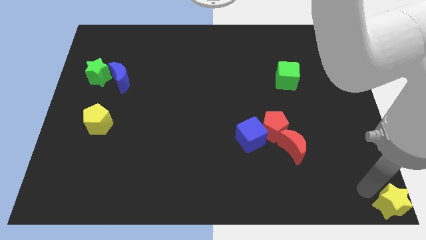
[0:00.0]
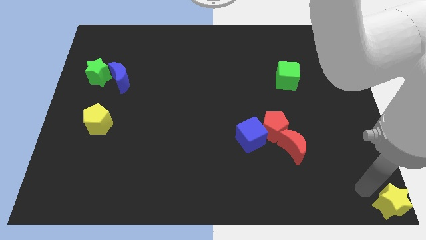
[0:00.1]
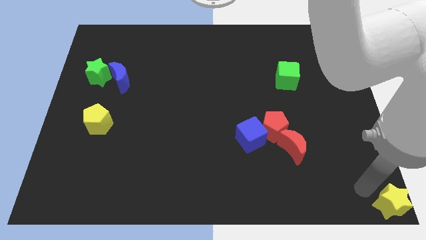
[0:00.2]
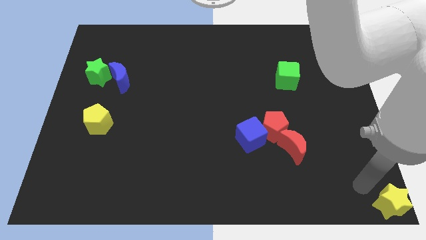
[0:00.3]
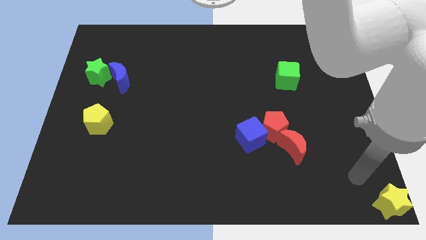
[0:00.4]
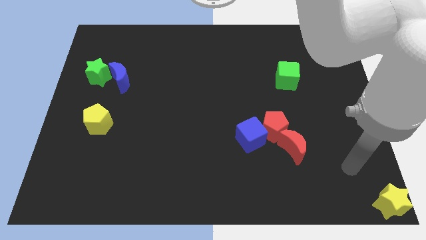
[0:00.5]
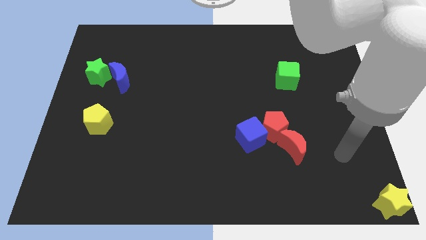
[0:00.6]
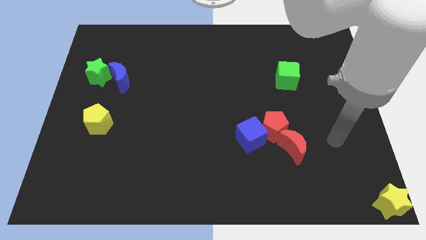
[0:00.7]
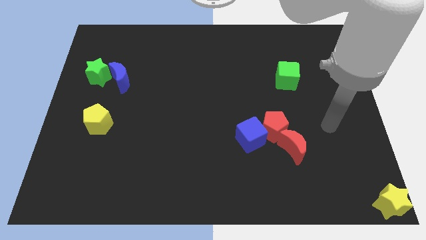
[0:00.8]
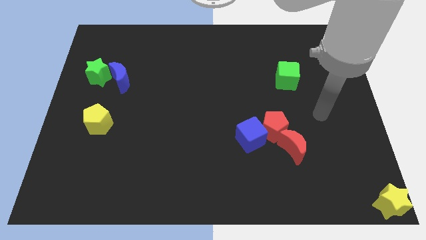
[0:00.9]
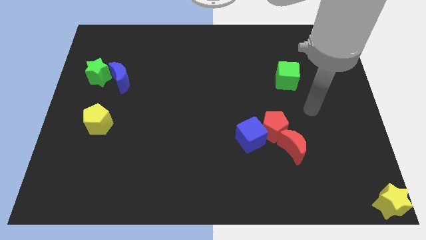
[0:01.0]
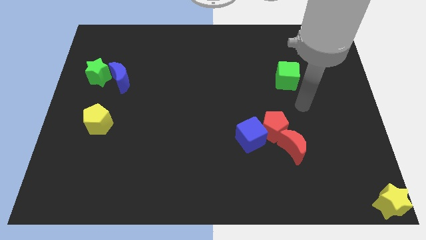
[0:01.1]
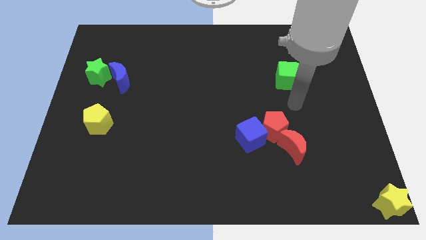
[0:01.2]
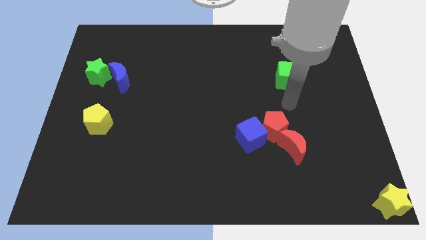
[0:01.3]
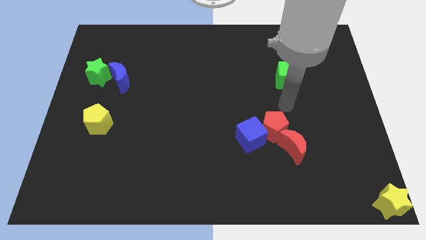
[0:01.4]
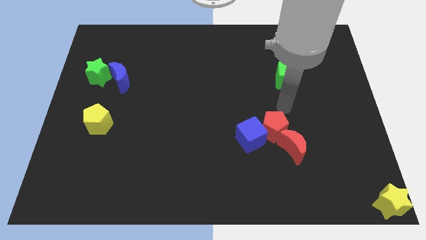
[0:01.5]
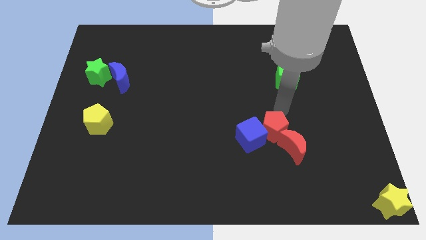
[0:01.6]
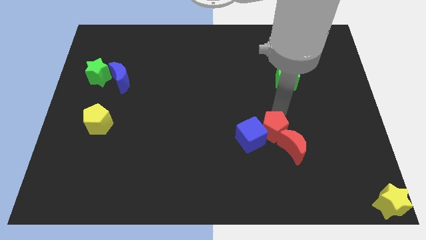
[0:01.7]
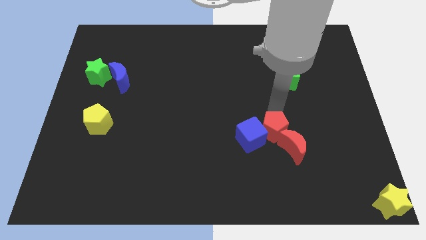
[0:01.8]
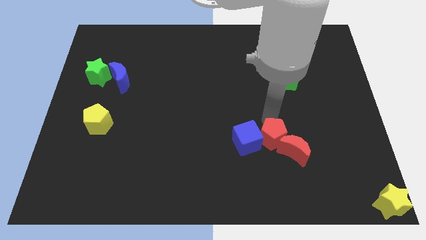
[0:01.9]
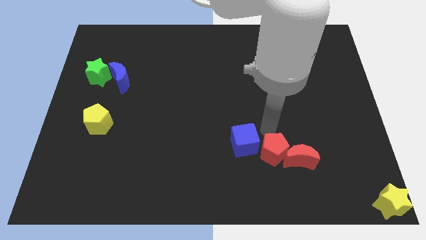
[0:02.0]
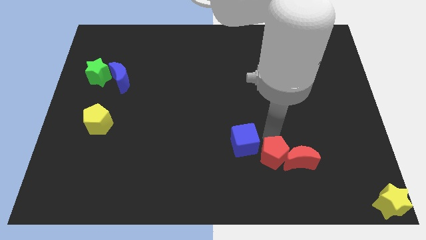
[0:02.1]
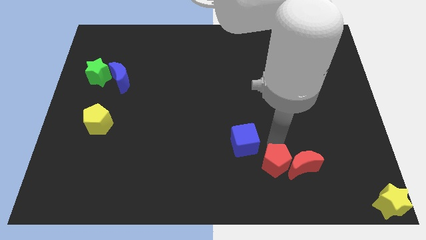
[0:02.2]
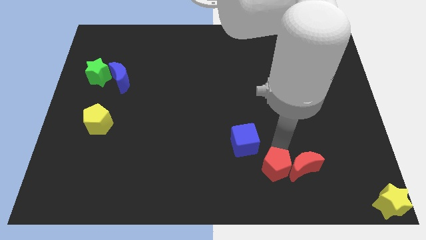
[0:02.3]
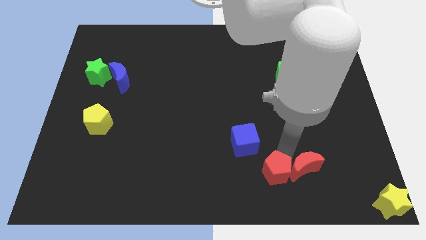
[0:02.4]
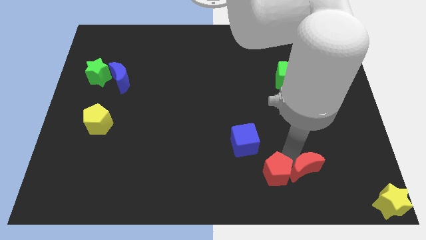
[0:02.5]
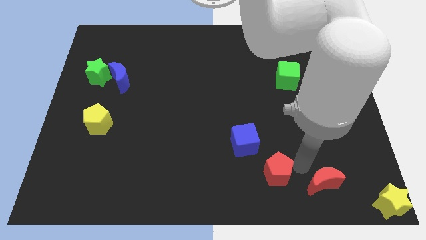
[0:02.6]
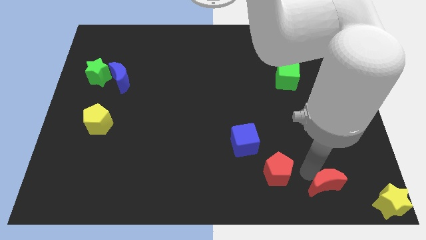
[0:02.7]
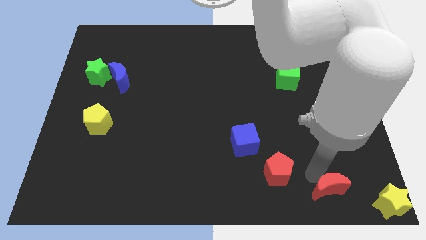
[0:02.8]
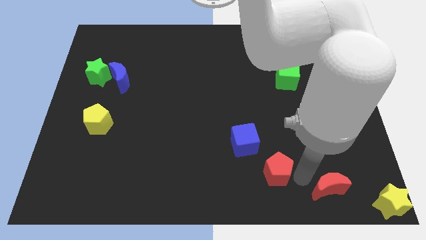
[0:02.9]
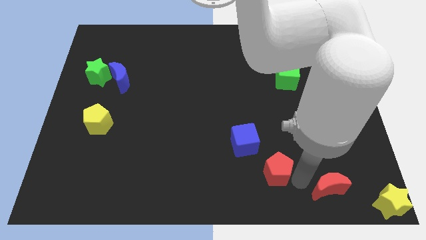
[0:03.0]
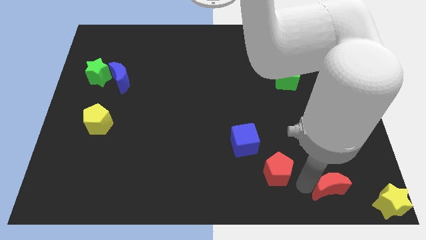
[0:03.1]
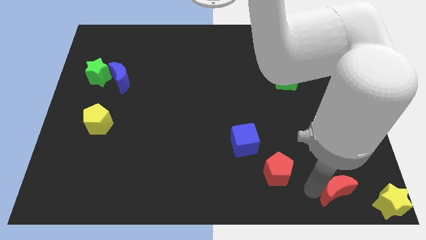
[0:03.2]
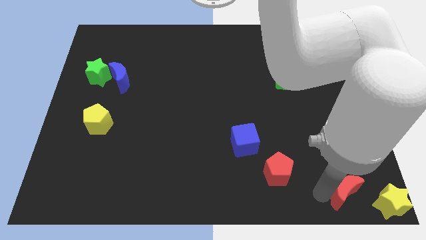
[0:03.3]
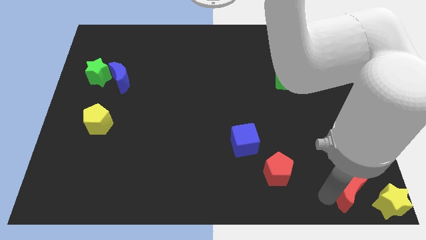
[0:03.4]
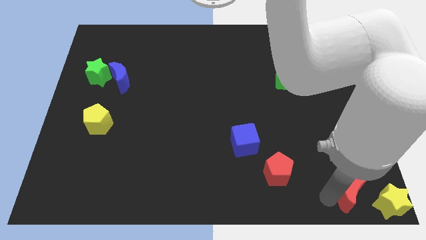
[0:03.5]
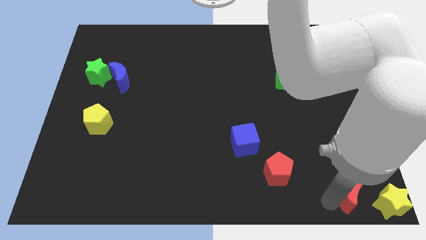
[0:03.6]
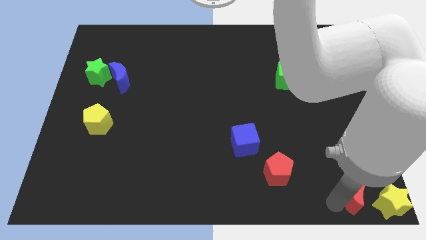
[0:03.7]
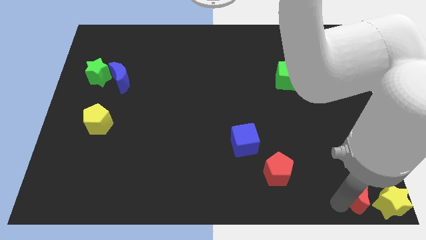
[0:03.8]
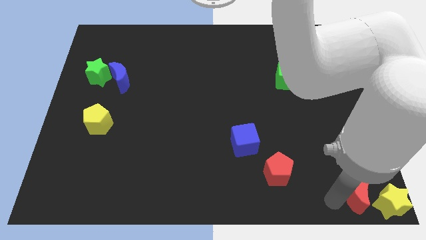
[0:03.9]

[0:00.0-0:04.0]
separate red moon from the red pentagon and blue cube

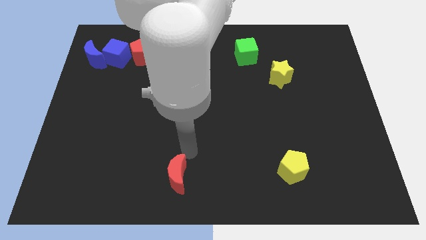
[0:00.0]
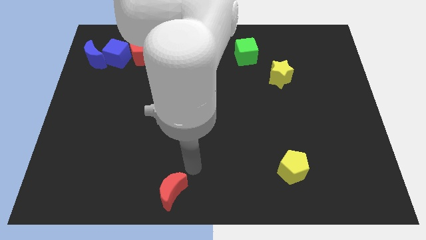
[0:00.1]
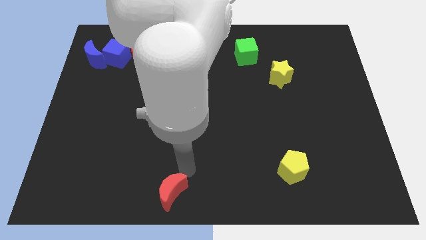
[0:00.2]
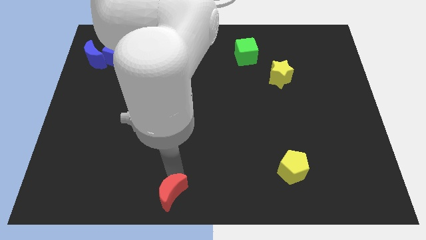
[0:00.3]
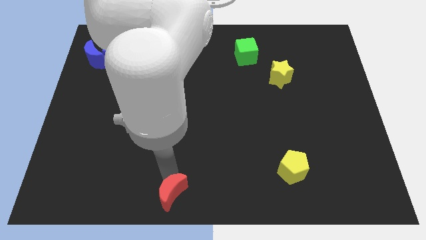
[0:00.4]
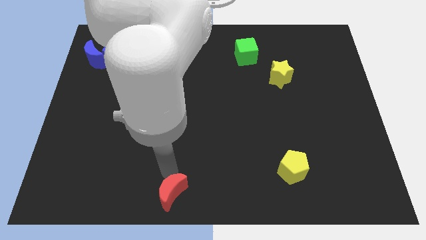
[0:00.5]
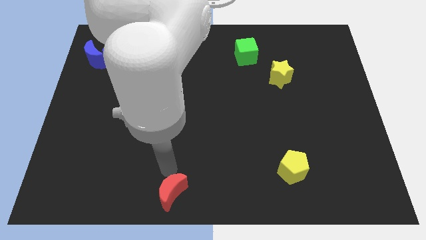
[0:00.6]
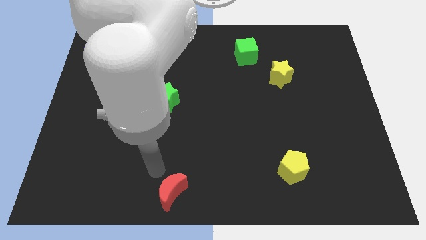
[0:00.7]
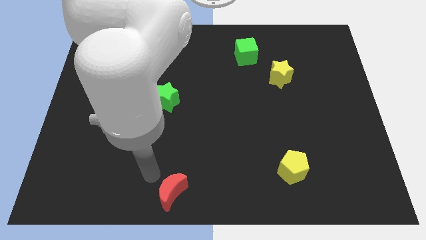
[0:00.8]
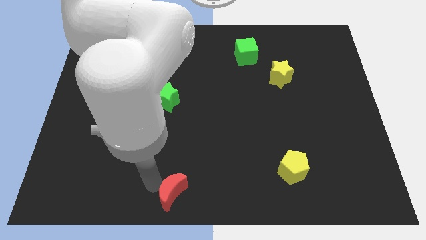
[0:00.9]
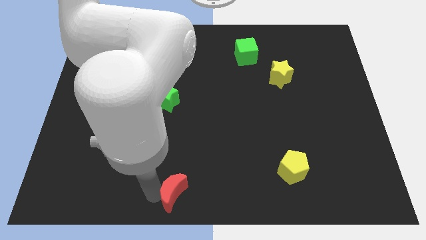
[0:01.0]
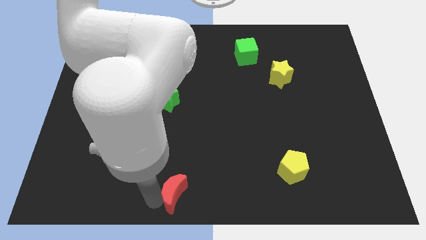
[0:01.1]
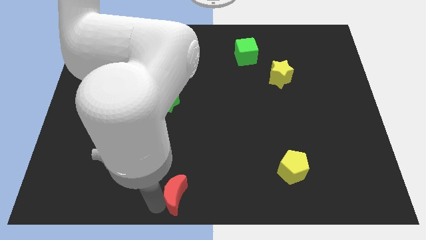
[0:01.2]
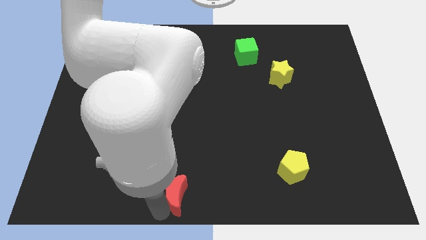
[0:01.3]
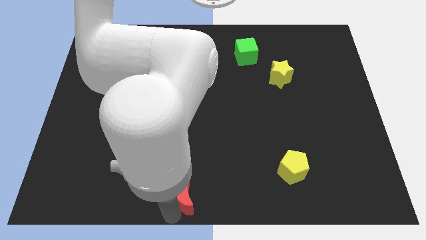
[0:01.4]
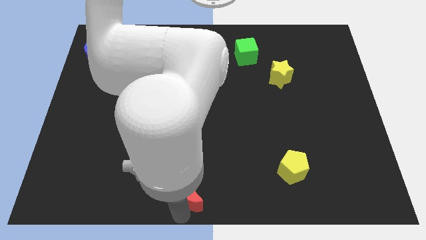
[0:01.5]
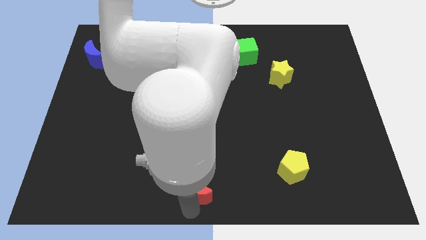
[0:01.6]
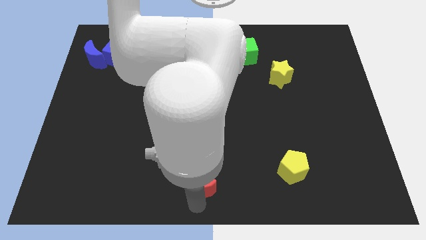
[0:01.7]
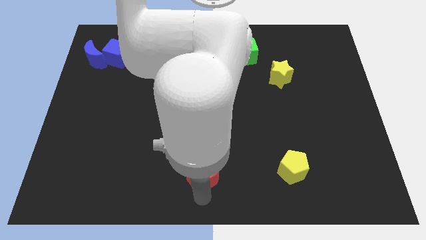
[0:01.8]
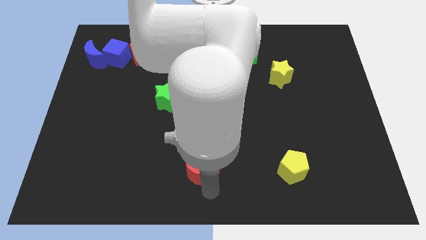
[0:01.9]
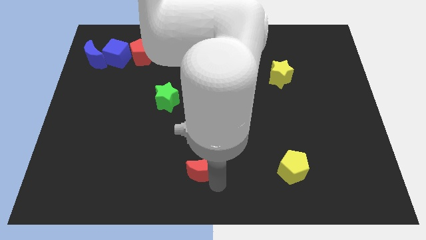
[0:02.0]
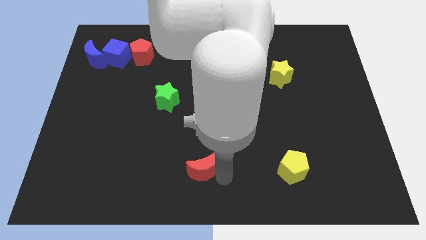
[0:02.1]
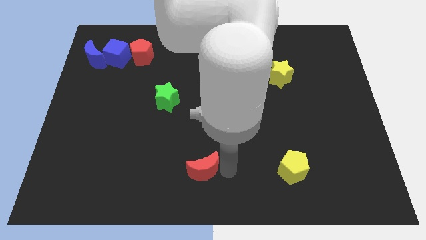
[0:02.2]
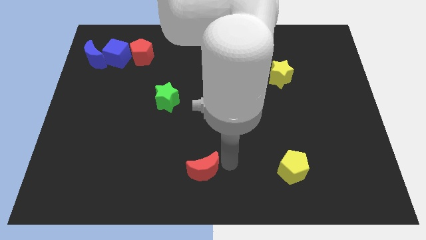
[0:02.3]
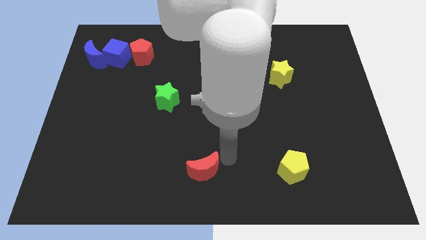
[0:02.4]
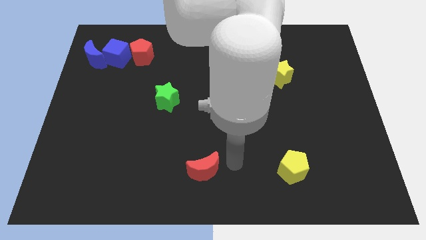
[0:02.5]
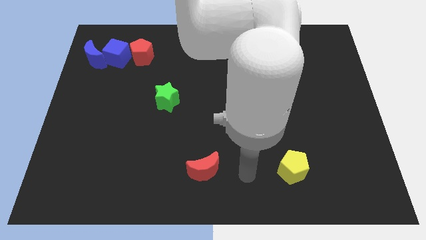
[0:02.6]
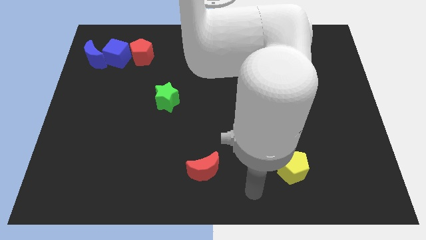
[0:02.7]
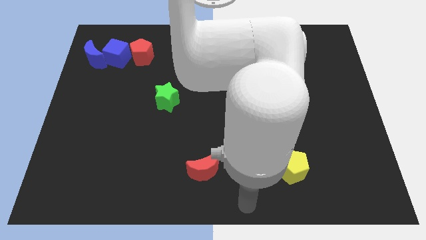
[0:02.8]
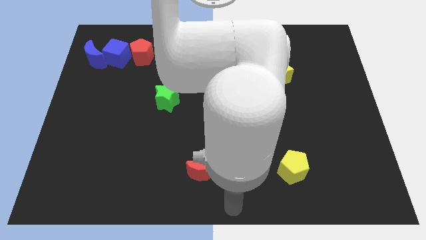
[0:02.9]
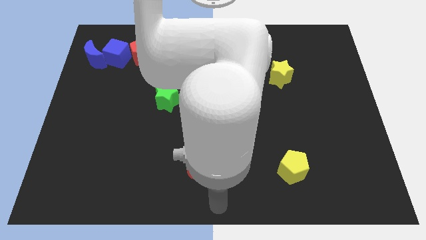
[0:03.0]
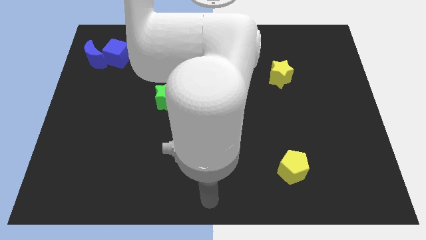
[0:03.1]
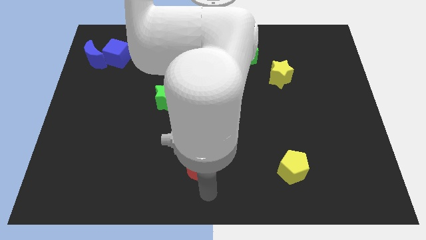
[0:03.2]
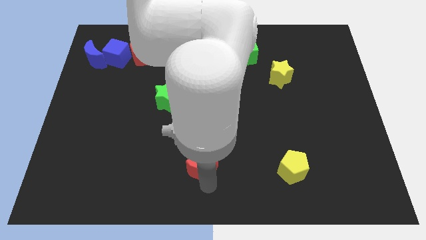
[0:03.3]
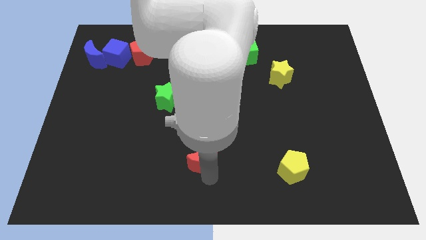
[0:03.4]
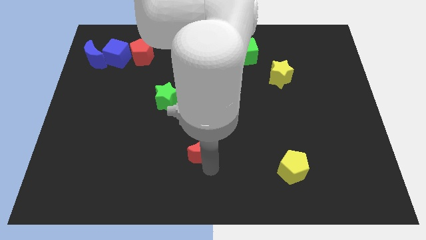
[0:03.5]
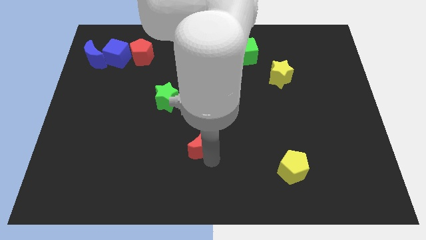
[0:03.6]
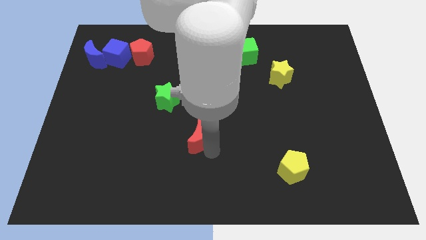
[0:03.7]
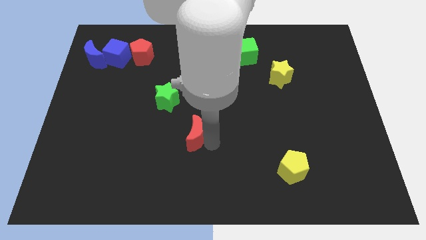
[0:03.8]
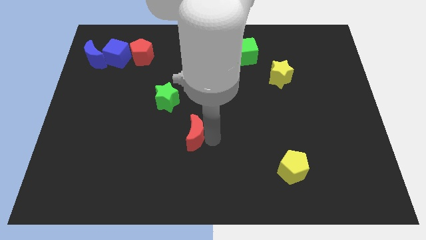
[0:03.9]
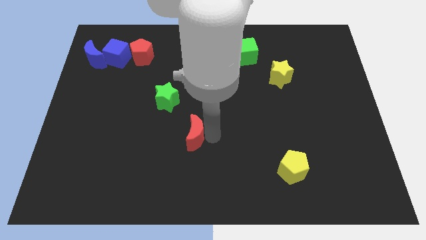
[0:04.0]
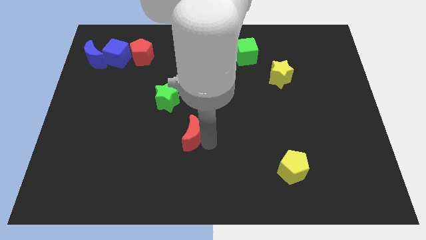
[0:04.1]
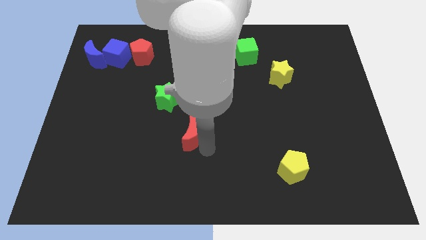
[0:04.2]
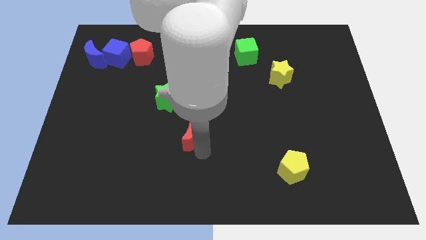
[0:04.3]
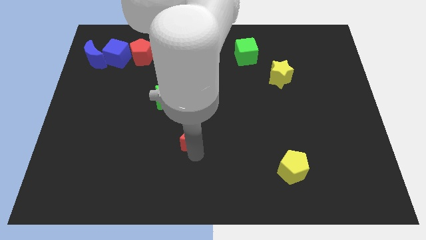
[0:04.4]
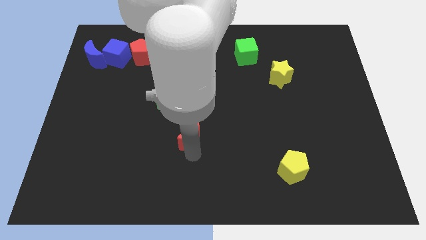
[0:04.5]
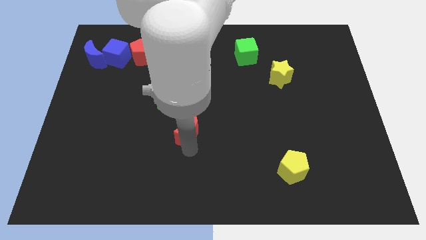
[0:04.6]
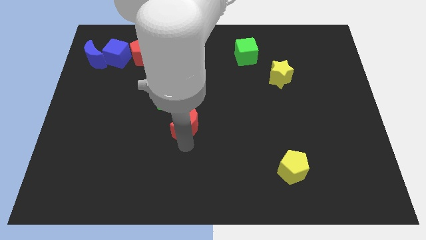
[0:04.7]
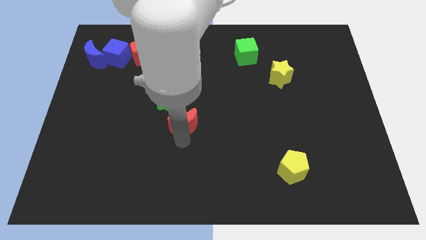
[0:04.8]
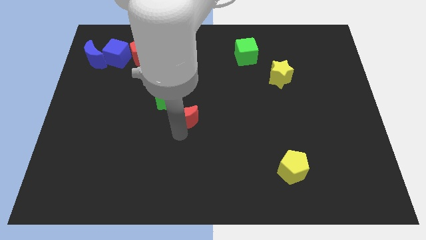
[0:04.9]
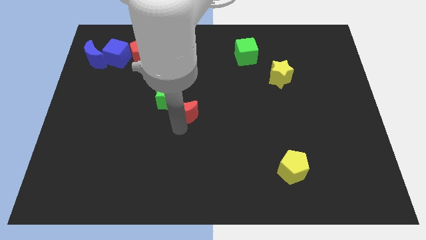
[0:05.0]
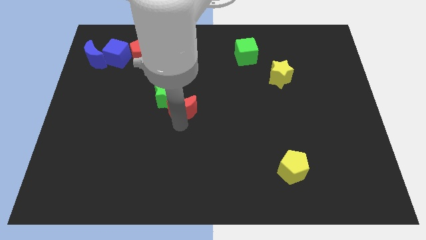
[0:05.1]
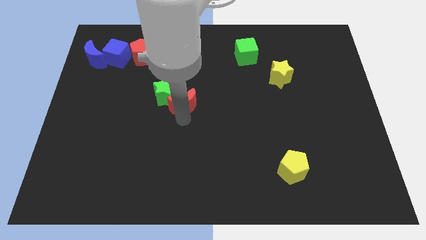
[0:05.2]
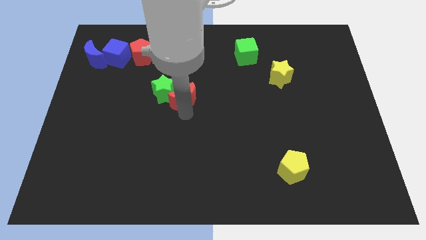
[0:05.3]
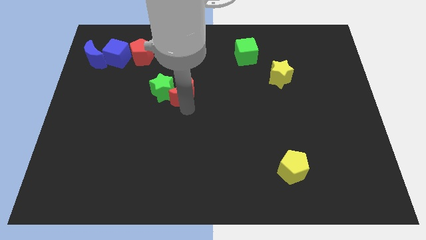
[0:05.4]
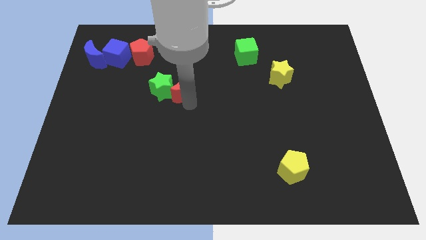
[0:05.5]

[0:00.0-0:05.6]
push the red crescent into the green star
